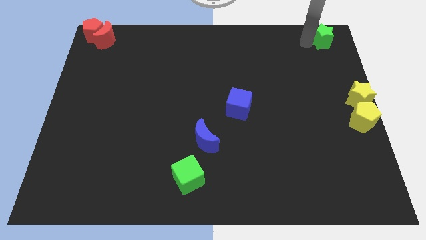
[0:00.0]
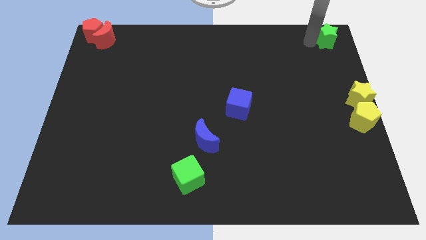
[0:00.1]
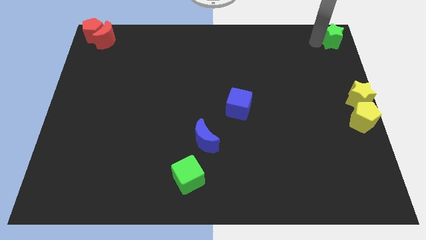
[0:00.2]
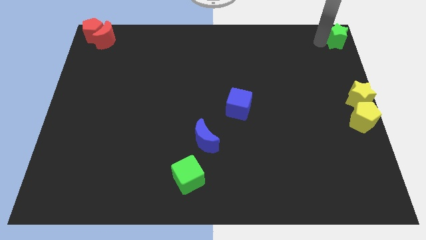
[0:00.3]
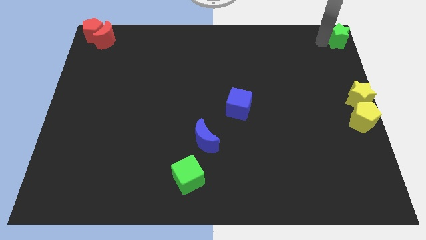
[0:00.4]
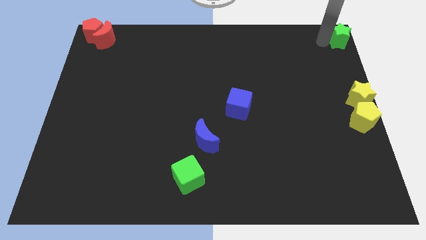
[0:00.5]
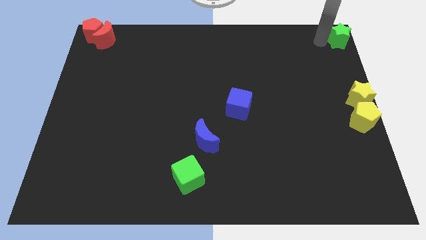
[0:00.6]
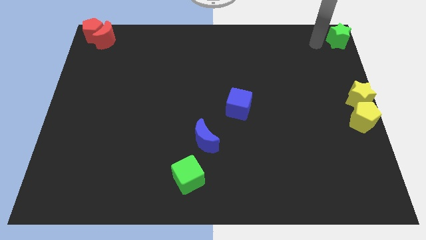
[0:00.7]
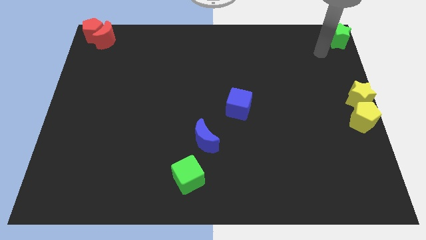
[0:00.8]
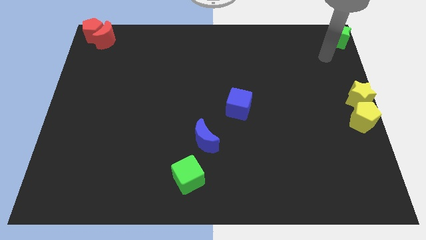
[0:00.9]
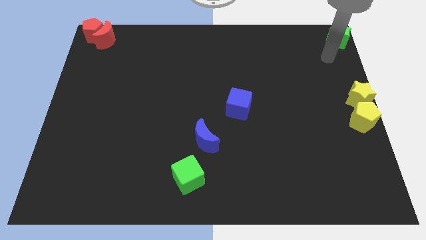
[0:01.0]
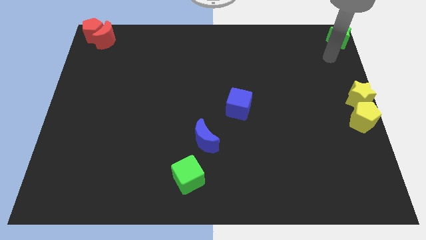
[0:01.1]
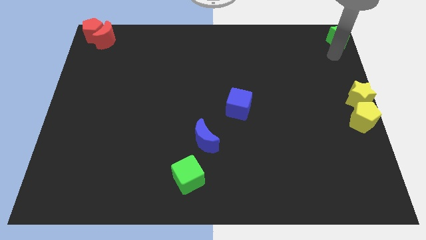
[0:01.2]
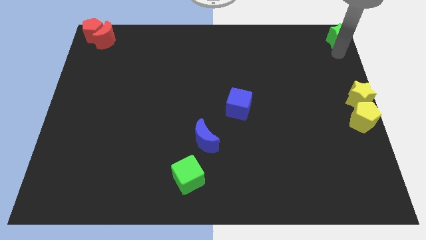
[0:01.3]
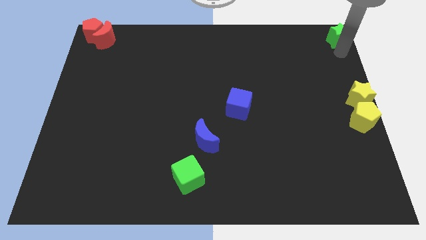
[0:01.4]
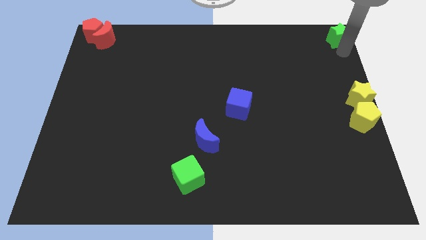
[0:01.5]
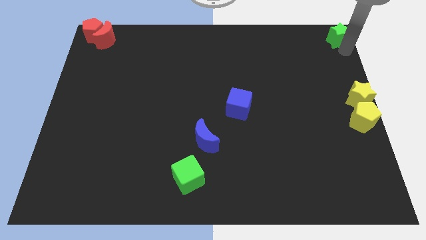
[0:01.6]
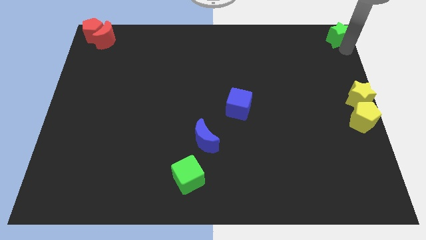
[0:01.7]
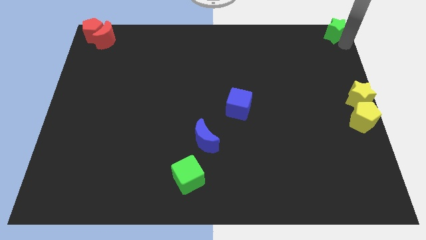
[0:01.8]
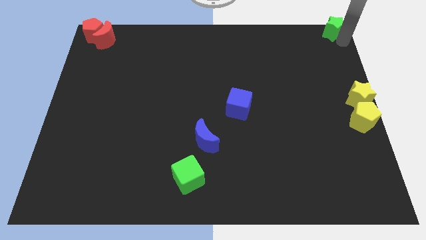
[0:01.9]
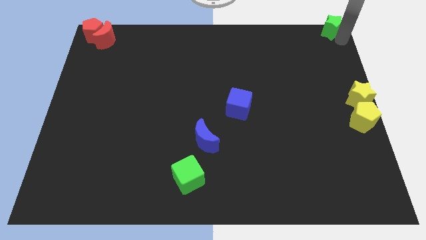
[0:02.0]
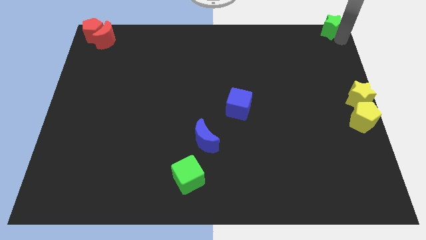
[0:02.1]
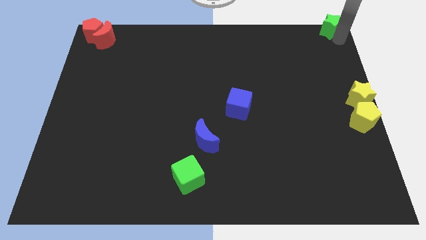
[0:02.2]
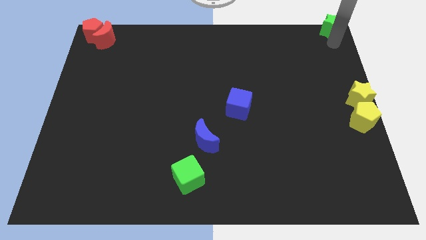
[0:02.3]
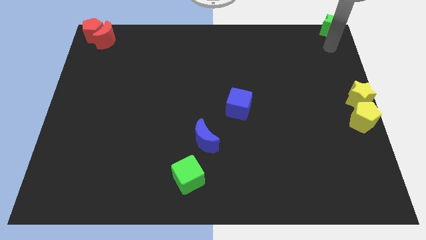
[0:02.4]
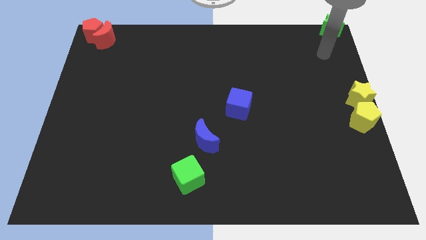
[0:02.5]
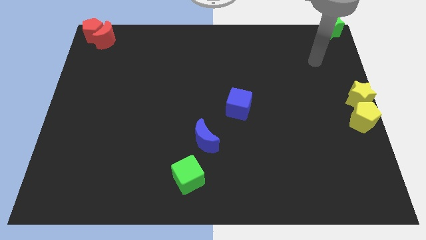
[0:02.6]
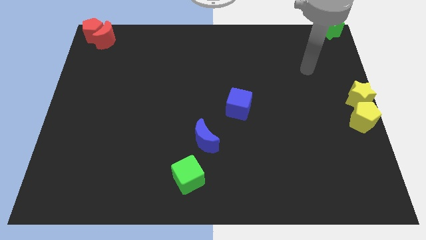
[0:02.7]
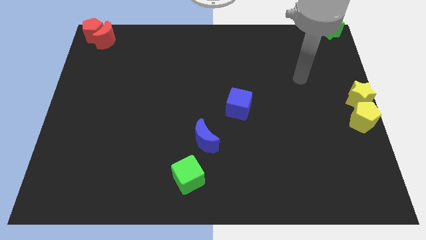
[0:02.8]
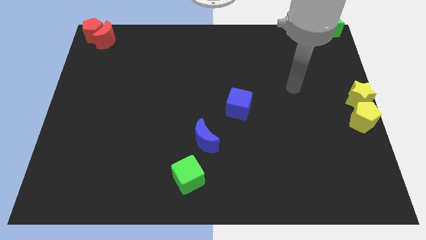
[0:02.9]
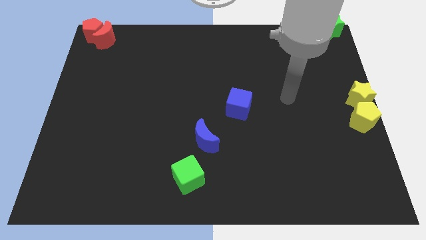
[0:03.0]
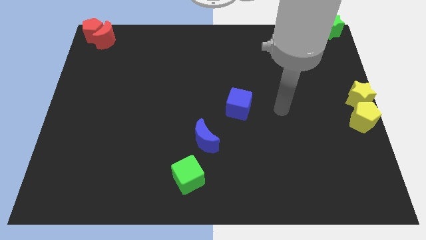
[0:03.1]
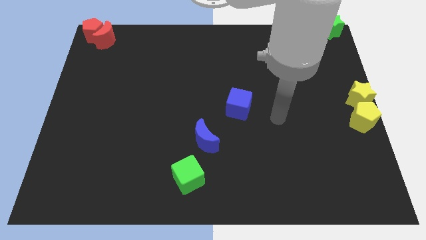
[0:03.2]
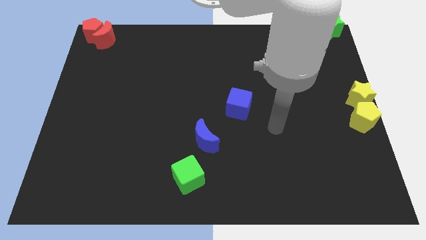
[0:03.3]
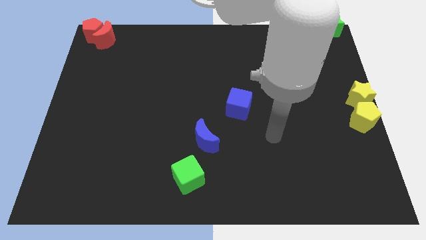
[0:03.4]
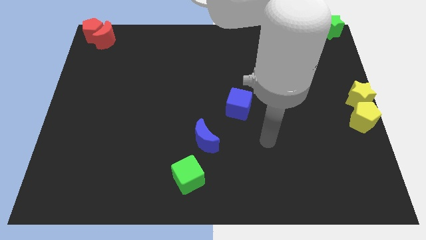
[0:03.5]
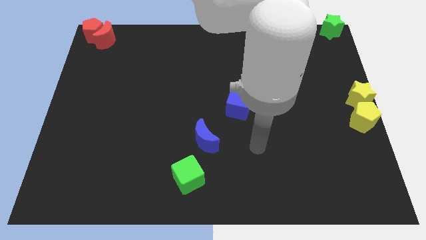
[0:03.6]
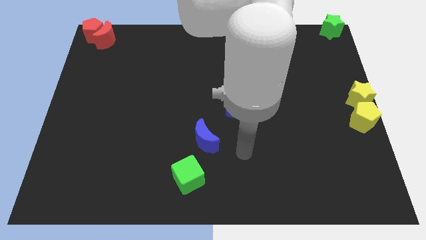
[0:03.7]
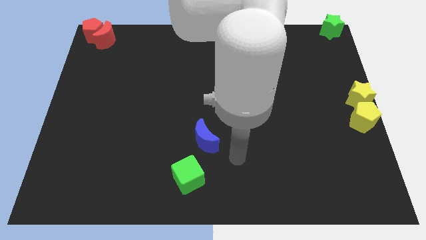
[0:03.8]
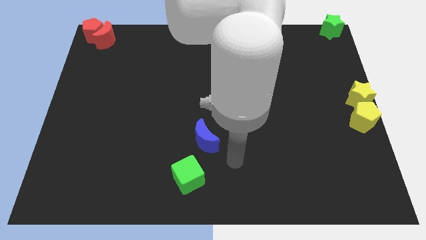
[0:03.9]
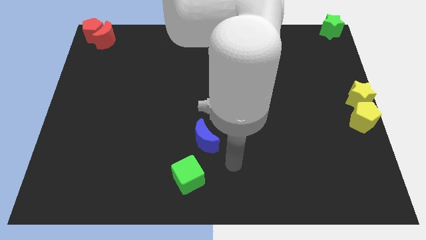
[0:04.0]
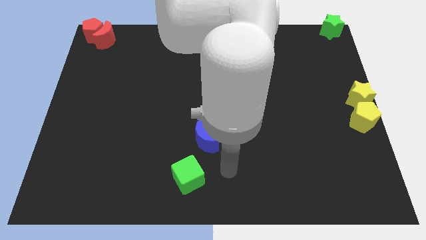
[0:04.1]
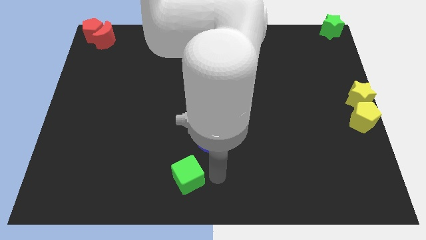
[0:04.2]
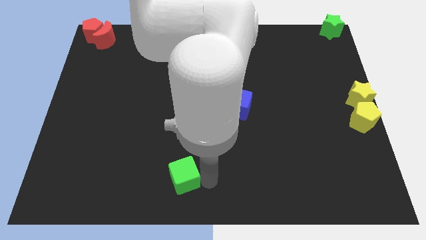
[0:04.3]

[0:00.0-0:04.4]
move your arm to the bottom right corner of the green cube

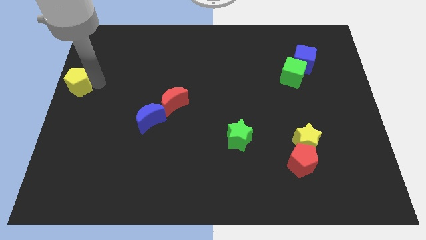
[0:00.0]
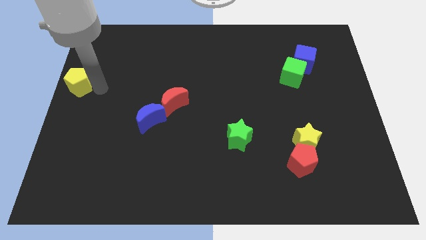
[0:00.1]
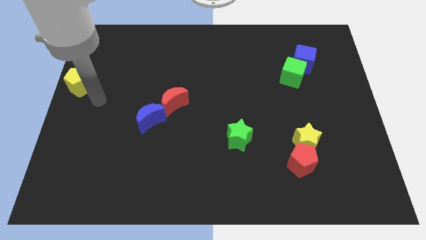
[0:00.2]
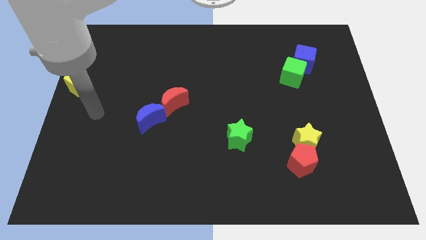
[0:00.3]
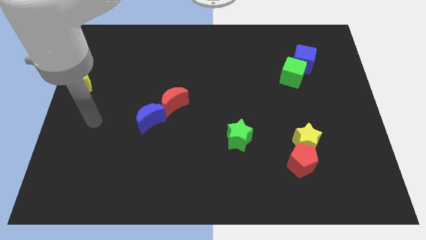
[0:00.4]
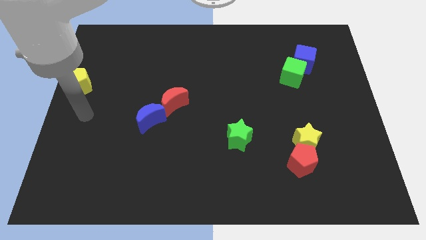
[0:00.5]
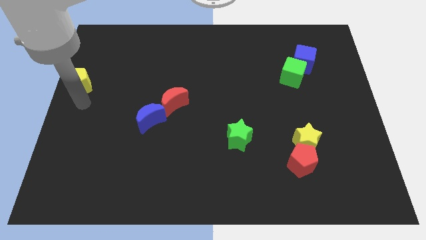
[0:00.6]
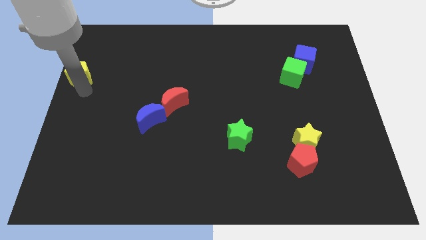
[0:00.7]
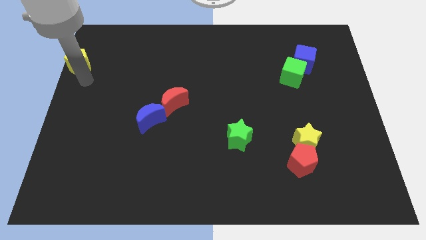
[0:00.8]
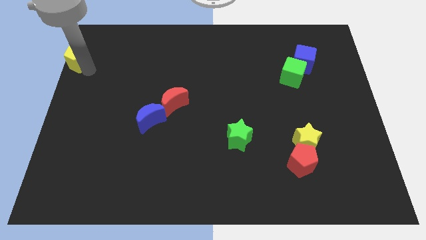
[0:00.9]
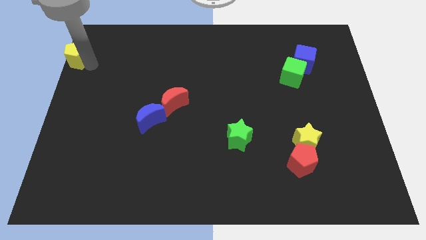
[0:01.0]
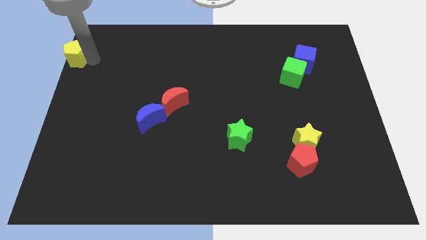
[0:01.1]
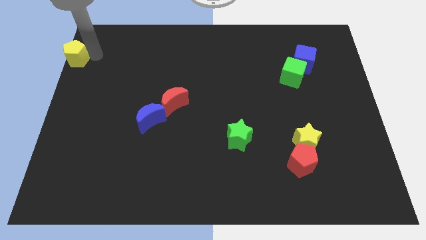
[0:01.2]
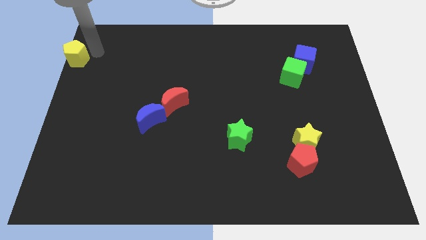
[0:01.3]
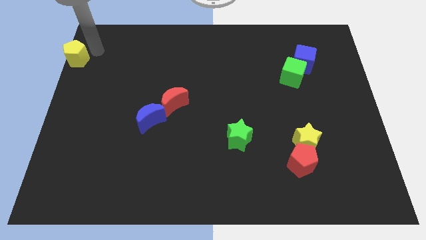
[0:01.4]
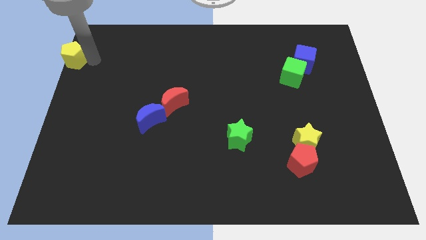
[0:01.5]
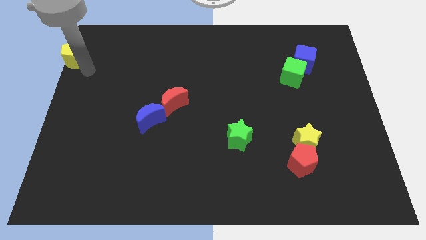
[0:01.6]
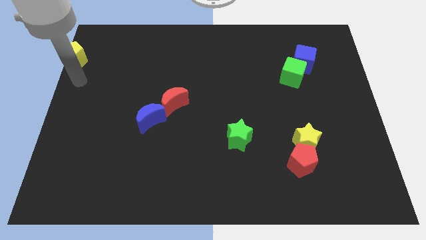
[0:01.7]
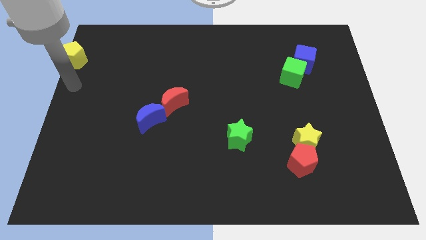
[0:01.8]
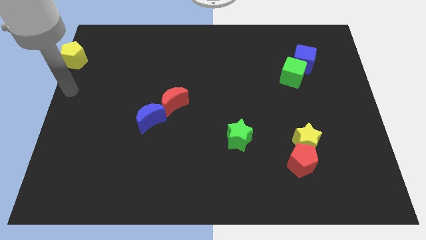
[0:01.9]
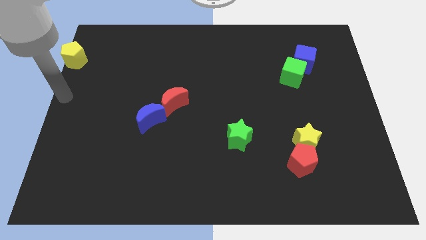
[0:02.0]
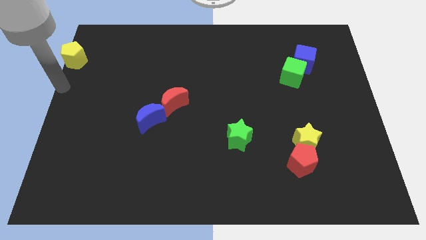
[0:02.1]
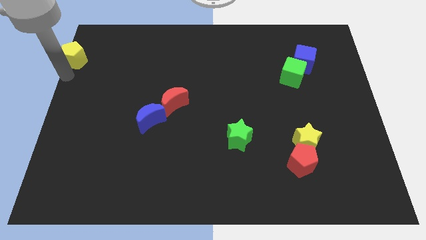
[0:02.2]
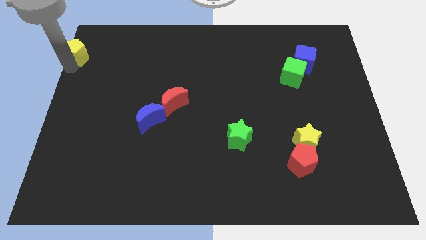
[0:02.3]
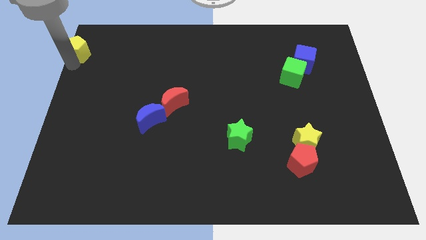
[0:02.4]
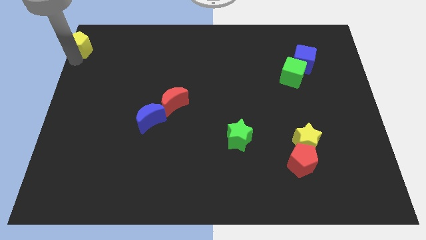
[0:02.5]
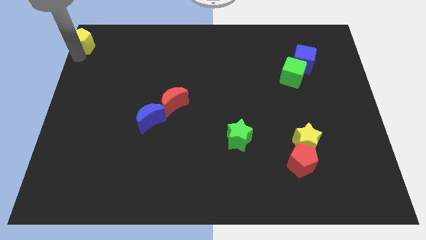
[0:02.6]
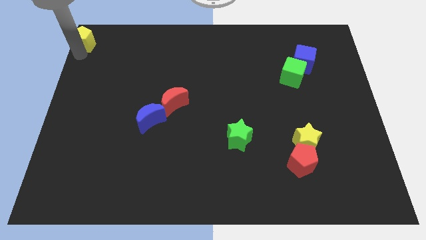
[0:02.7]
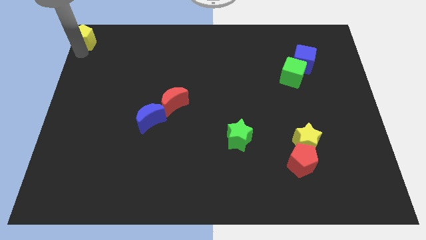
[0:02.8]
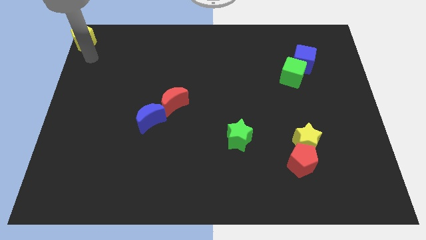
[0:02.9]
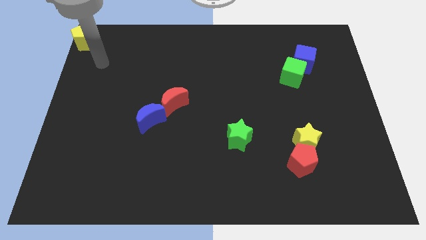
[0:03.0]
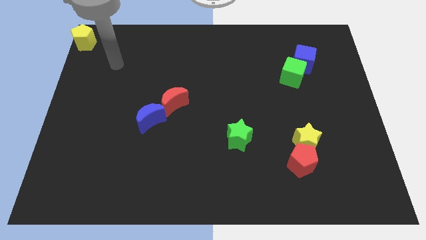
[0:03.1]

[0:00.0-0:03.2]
place the yellow pentagon at the top left corner

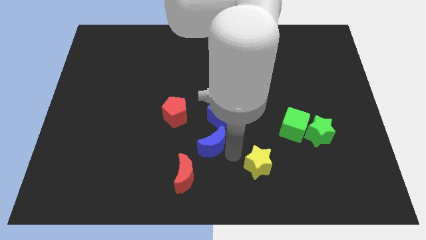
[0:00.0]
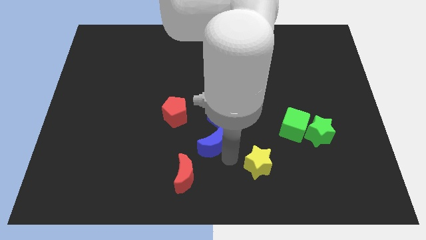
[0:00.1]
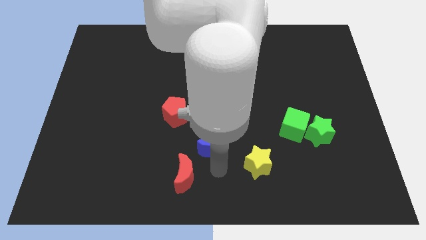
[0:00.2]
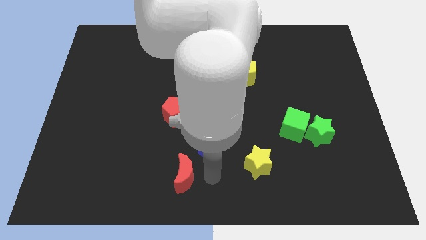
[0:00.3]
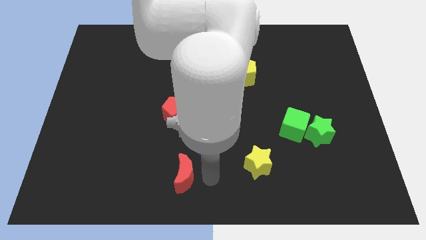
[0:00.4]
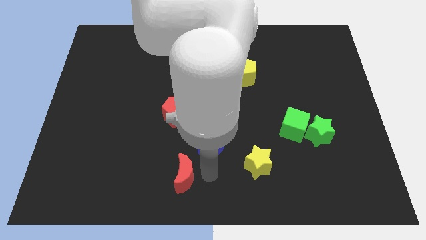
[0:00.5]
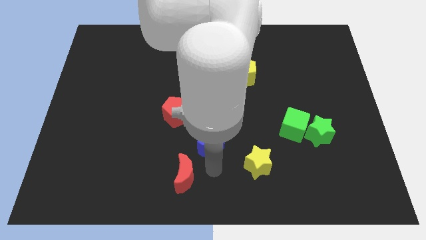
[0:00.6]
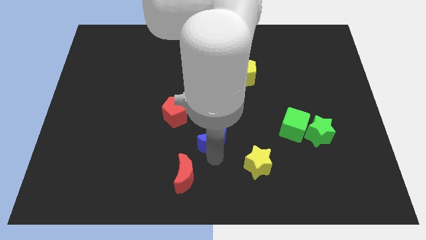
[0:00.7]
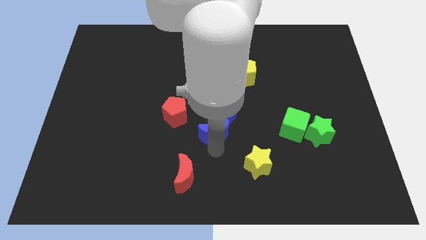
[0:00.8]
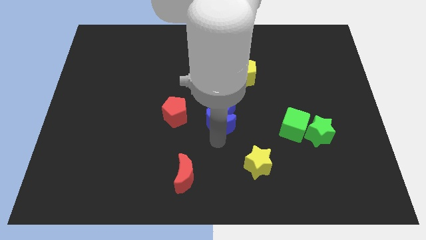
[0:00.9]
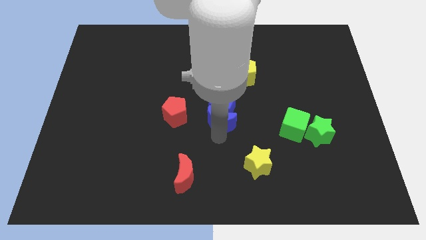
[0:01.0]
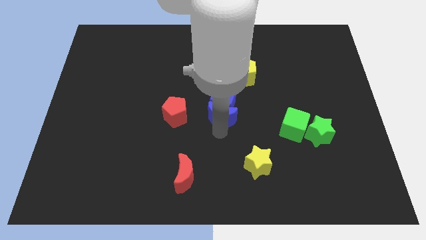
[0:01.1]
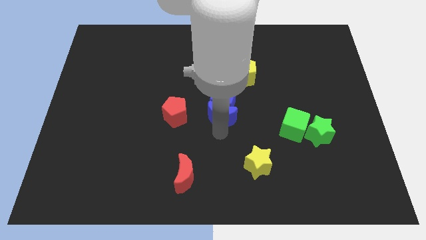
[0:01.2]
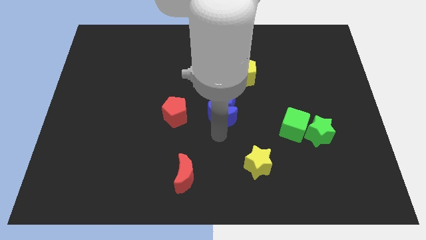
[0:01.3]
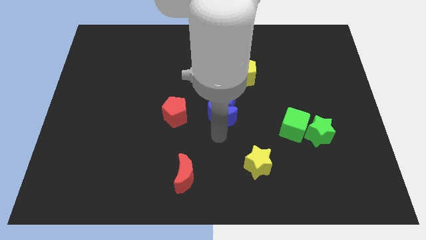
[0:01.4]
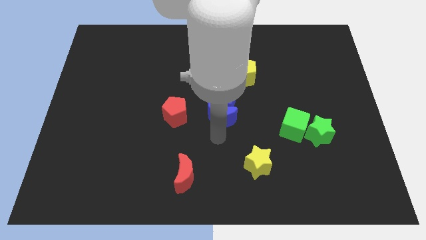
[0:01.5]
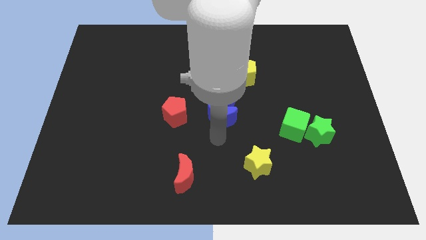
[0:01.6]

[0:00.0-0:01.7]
push the blue crescent and blue cube towards the center
